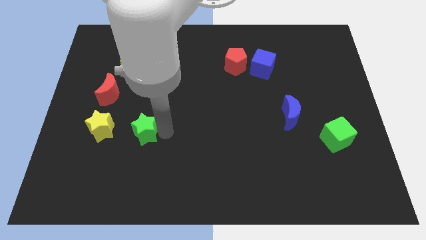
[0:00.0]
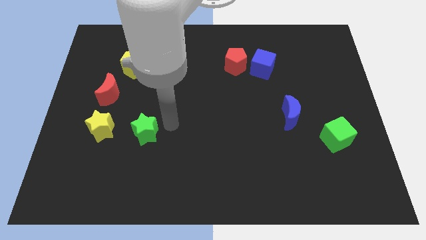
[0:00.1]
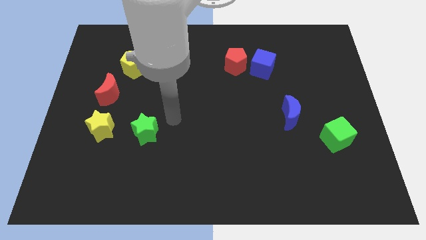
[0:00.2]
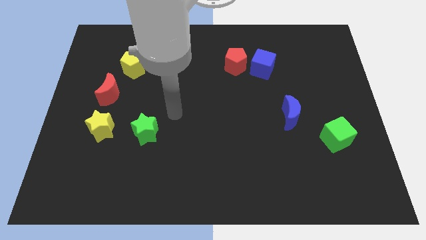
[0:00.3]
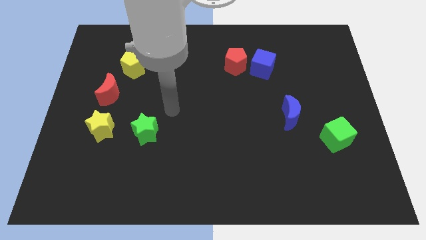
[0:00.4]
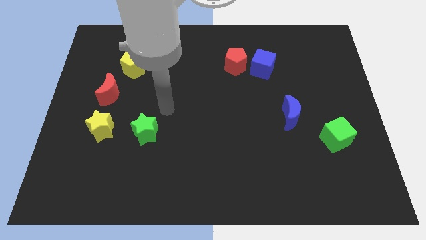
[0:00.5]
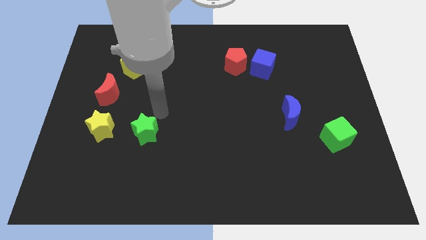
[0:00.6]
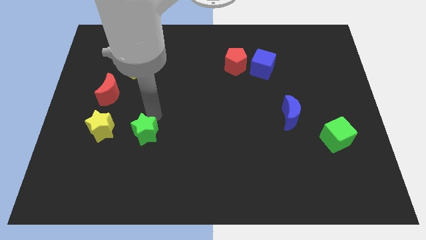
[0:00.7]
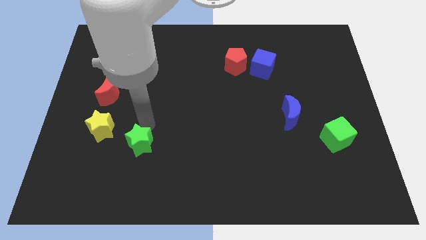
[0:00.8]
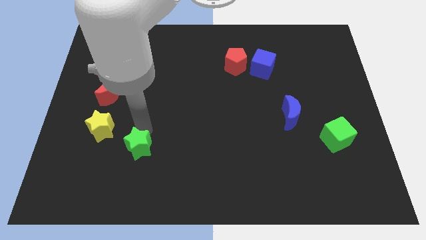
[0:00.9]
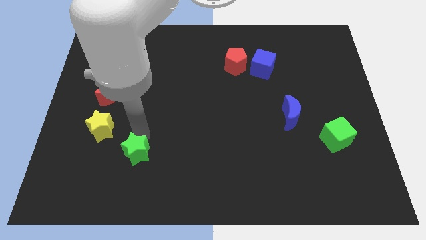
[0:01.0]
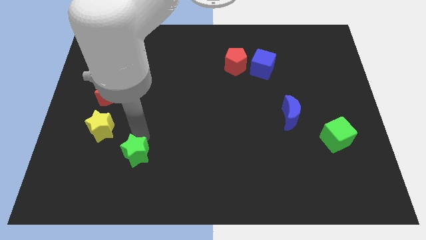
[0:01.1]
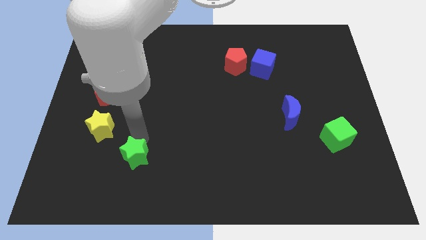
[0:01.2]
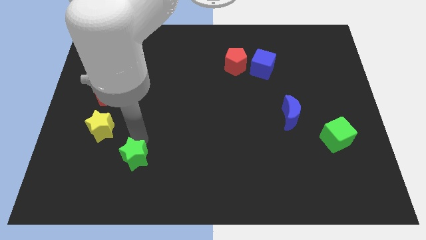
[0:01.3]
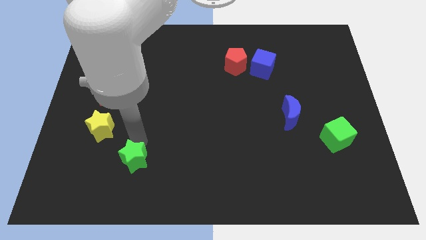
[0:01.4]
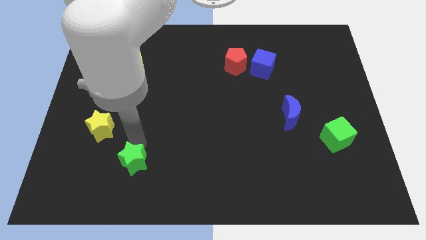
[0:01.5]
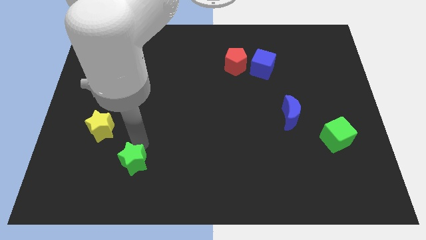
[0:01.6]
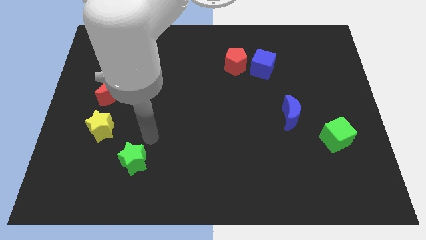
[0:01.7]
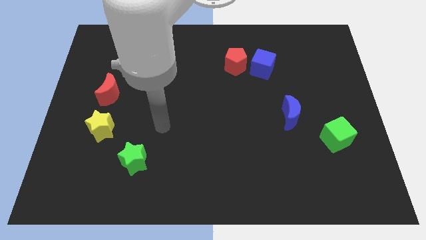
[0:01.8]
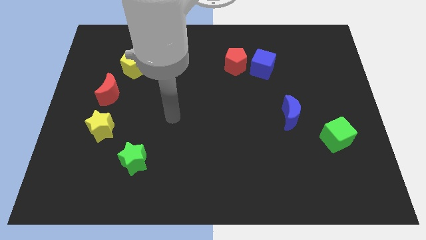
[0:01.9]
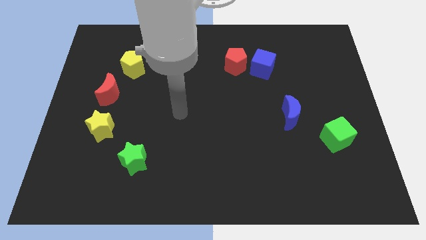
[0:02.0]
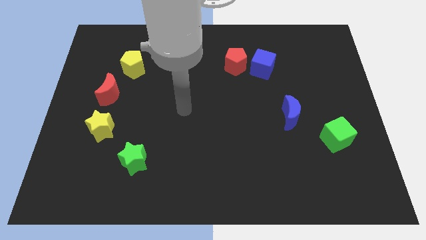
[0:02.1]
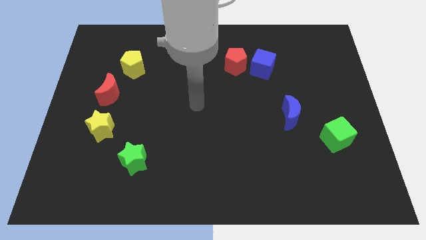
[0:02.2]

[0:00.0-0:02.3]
move green star towards the bottom right of yellow star

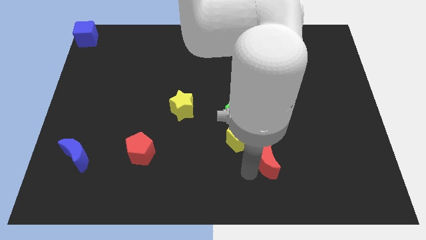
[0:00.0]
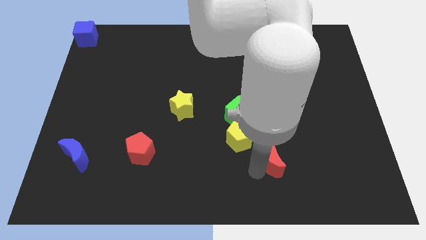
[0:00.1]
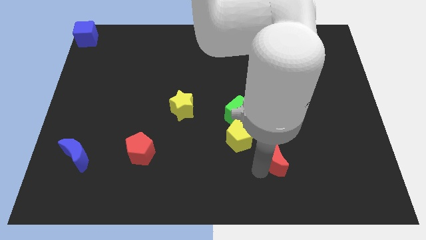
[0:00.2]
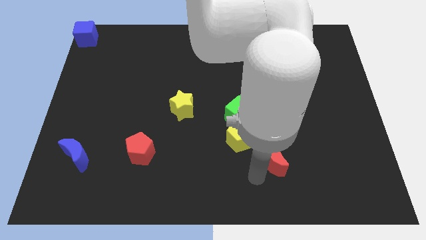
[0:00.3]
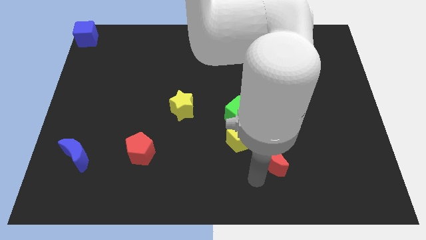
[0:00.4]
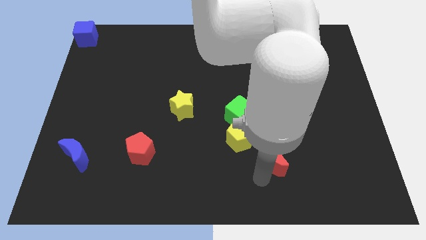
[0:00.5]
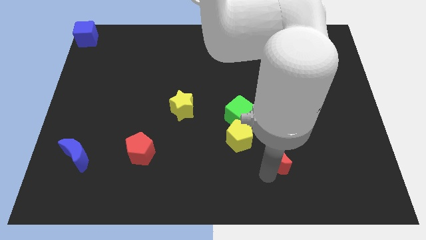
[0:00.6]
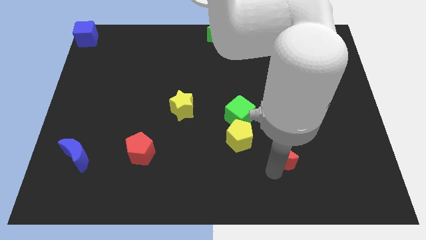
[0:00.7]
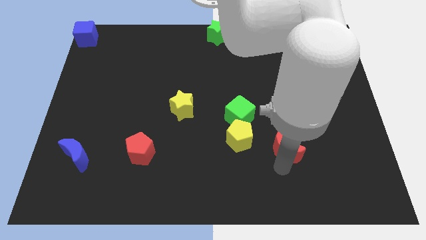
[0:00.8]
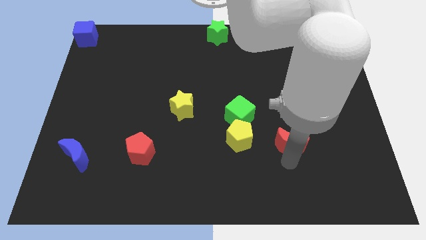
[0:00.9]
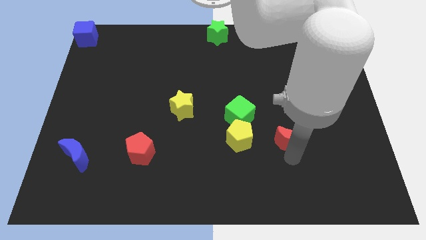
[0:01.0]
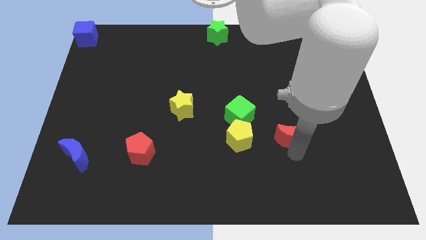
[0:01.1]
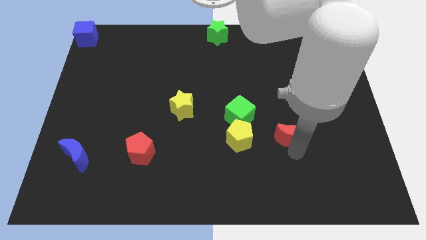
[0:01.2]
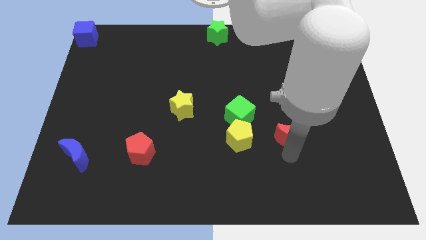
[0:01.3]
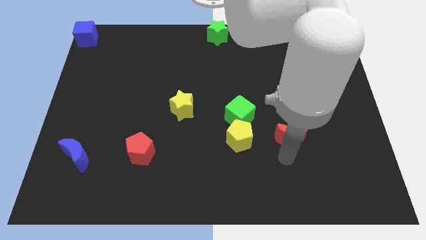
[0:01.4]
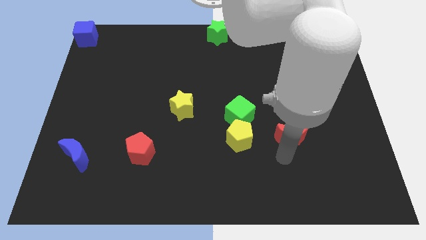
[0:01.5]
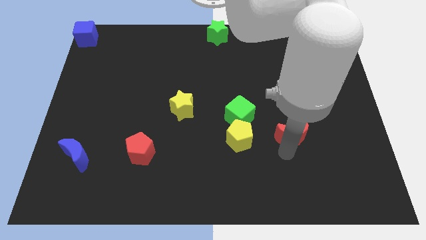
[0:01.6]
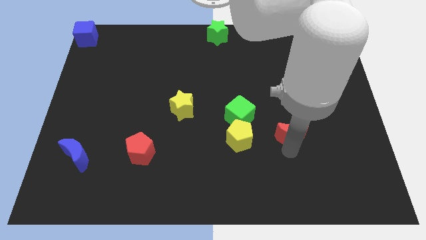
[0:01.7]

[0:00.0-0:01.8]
move the red crescent to the right of the yellow pentagon

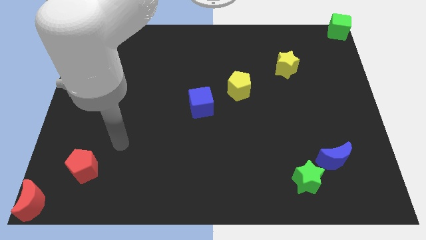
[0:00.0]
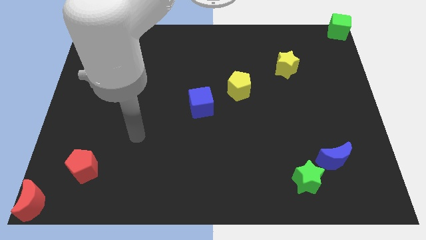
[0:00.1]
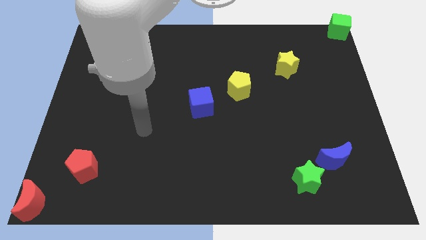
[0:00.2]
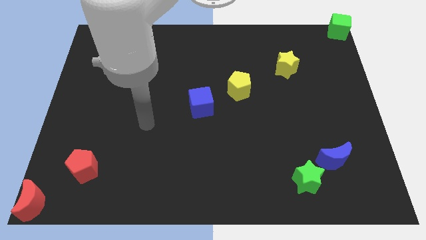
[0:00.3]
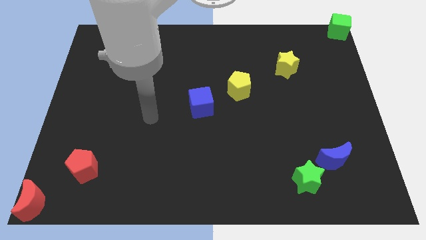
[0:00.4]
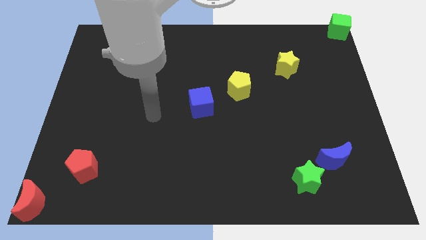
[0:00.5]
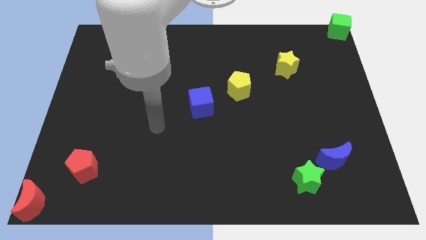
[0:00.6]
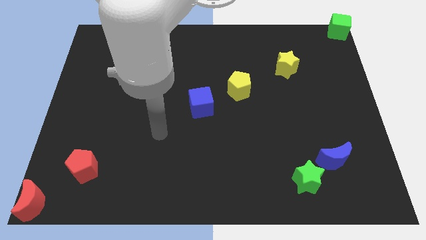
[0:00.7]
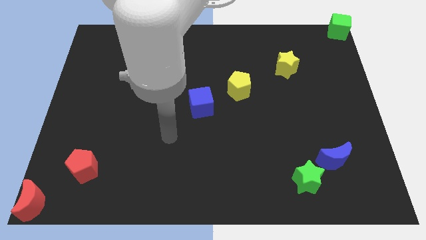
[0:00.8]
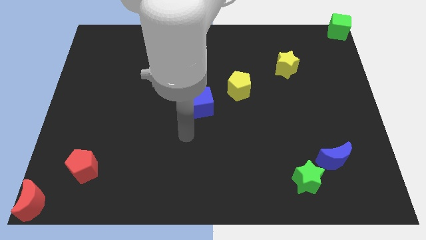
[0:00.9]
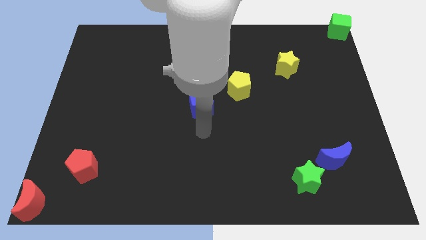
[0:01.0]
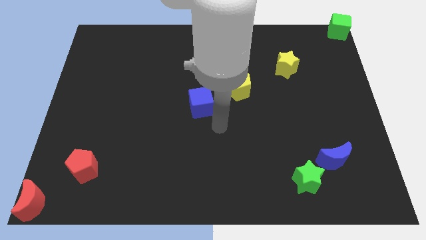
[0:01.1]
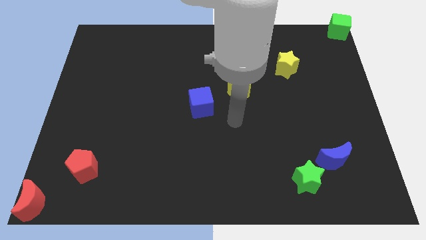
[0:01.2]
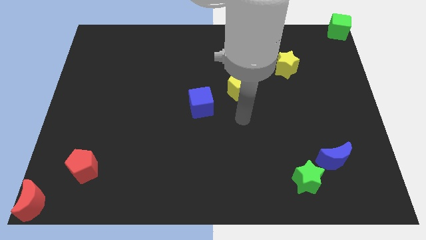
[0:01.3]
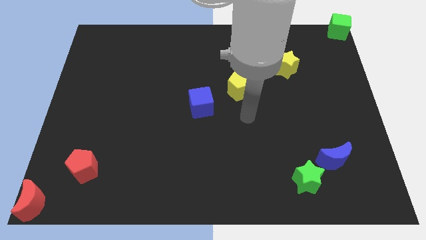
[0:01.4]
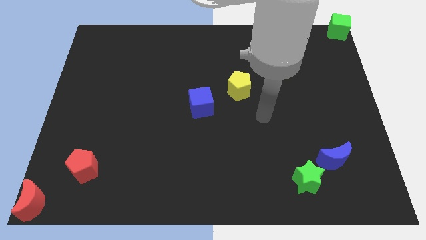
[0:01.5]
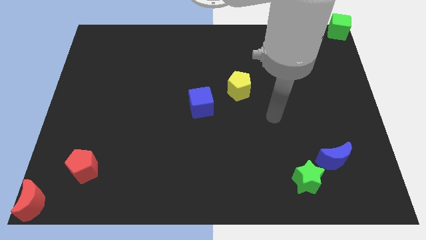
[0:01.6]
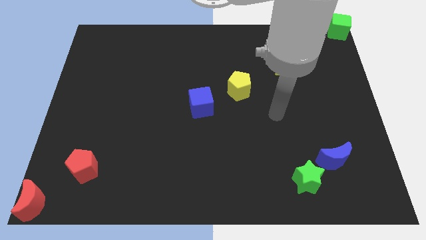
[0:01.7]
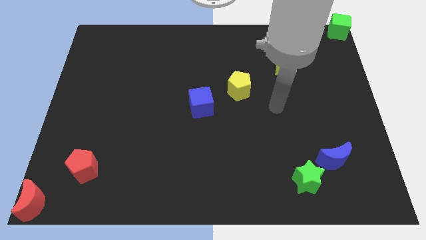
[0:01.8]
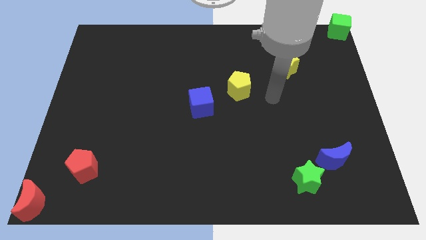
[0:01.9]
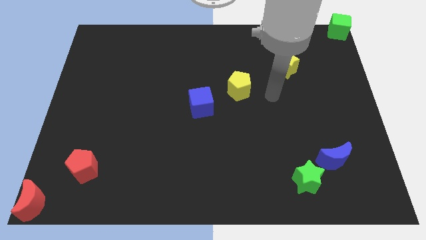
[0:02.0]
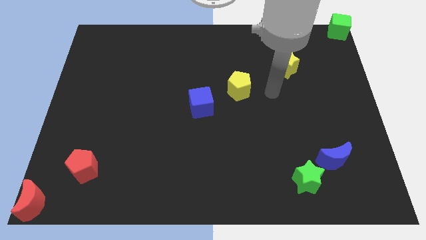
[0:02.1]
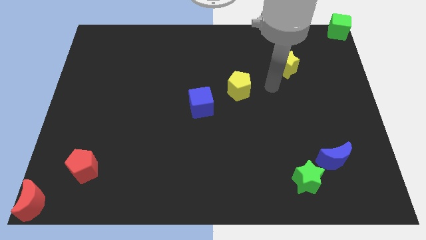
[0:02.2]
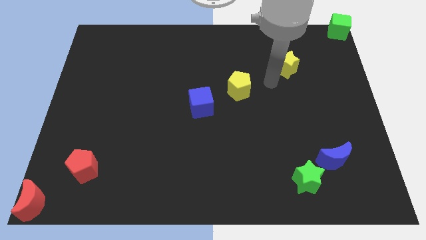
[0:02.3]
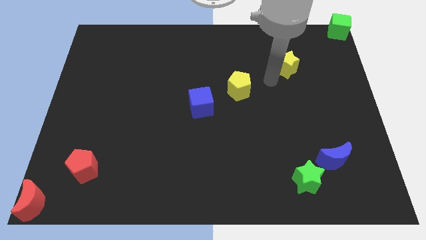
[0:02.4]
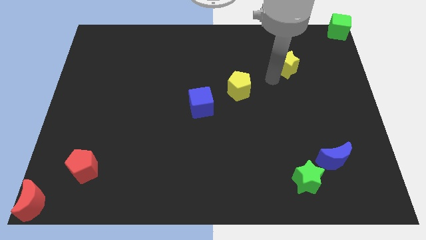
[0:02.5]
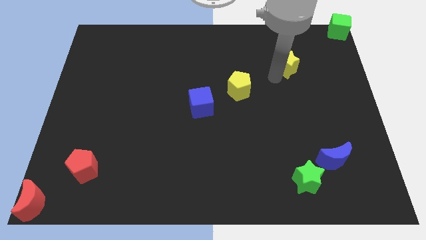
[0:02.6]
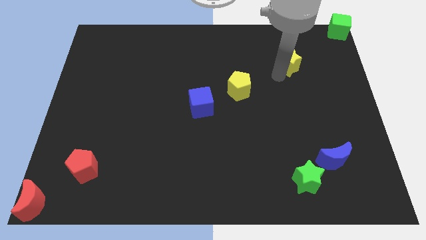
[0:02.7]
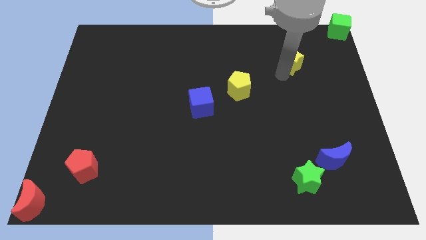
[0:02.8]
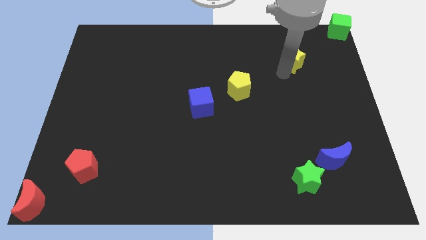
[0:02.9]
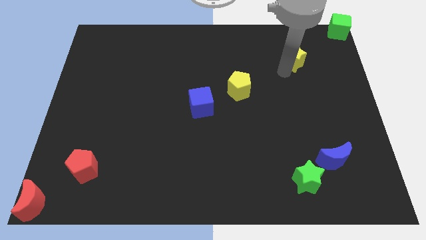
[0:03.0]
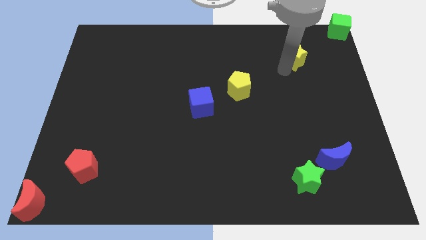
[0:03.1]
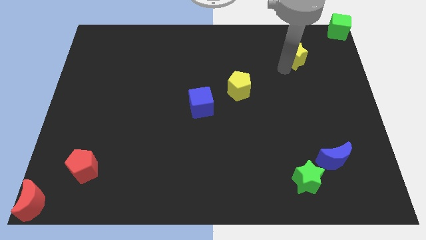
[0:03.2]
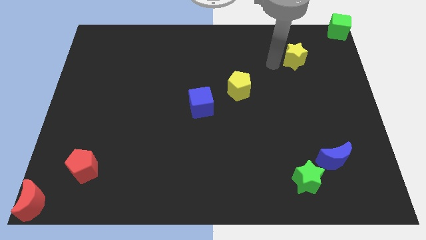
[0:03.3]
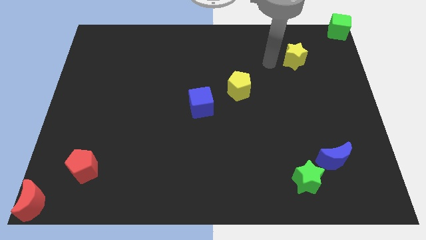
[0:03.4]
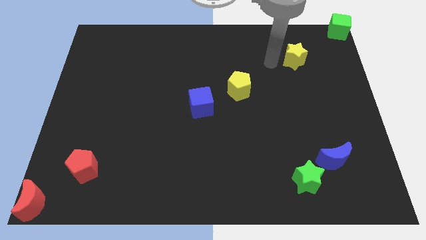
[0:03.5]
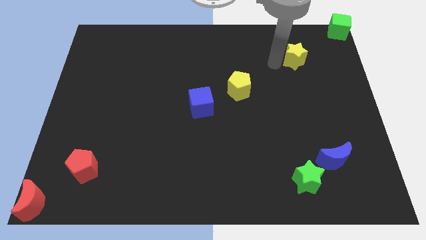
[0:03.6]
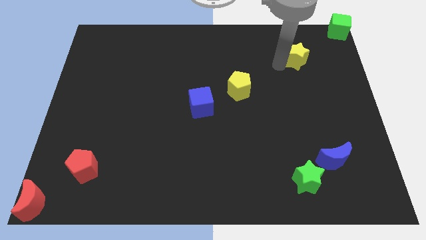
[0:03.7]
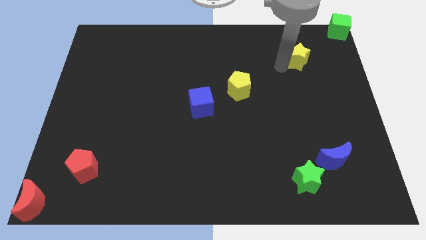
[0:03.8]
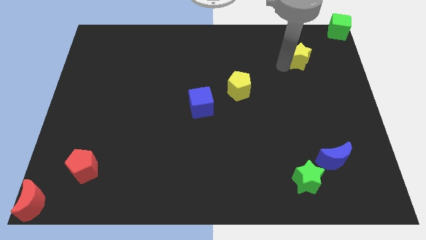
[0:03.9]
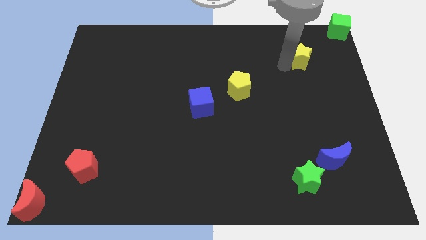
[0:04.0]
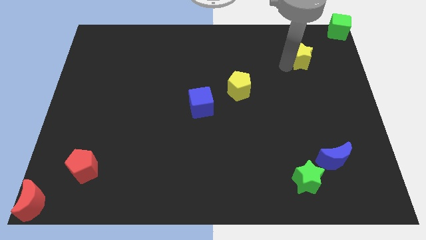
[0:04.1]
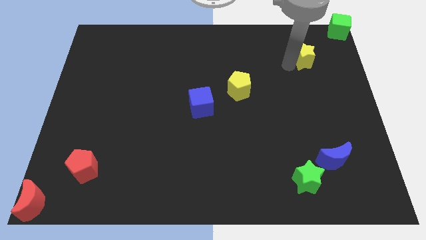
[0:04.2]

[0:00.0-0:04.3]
move the yellow star slightly towards the green cube

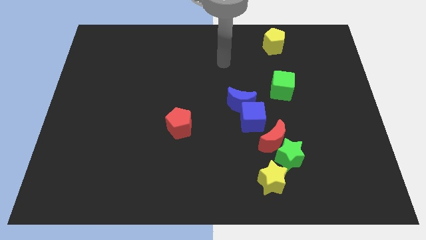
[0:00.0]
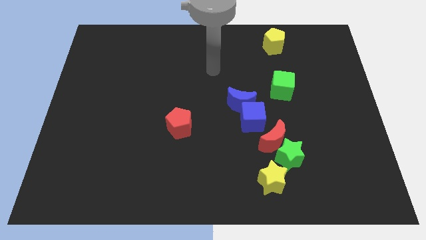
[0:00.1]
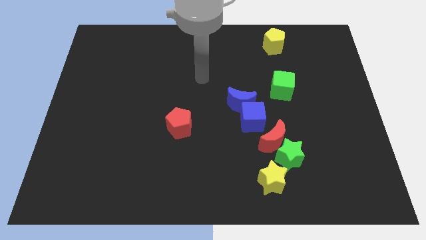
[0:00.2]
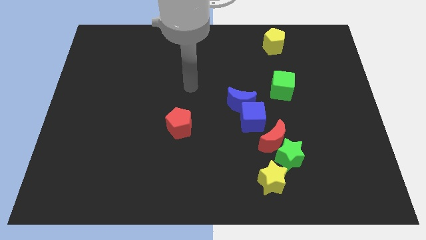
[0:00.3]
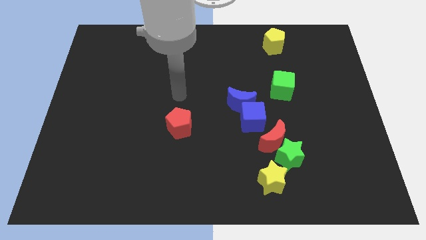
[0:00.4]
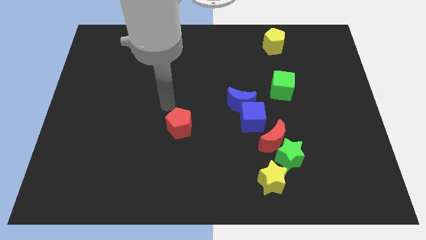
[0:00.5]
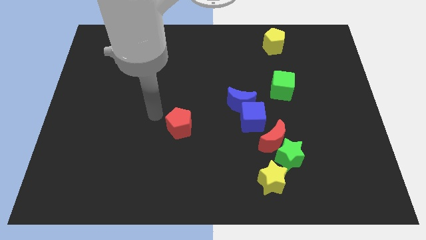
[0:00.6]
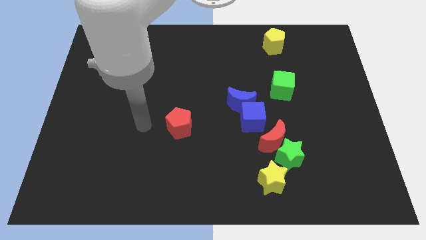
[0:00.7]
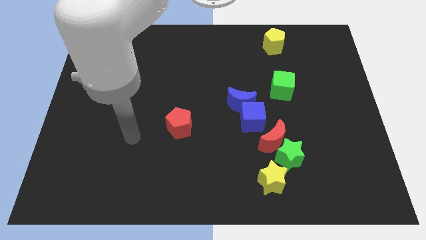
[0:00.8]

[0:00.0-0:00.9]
point the arm to the left of the red crescent
